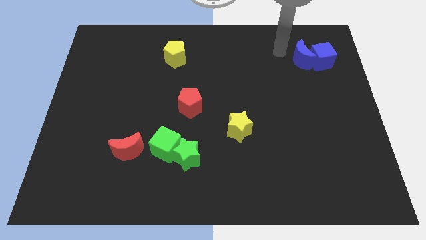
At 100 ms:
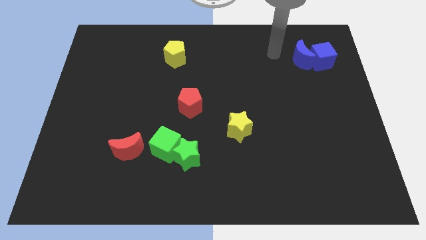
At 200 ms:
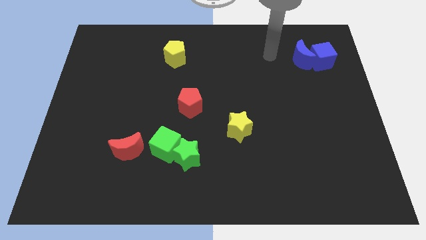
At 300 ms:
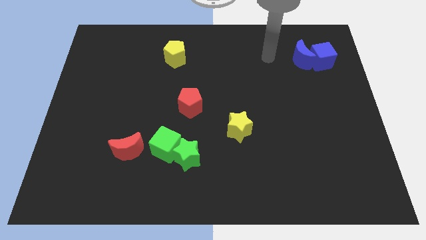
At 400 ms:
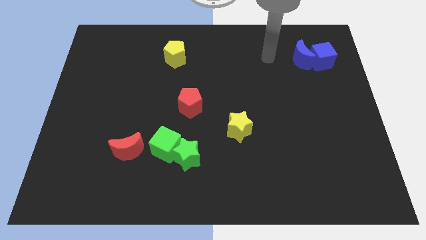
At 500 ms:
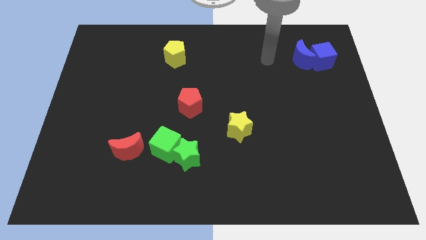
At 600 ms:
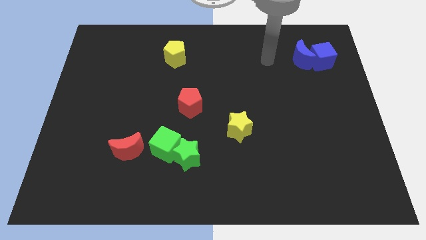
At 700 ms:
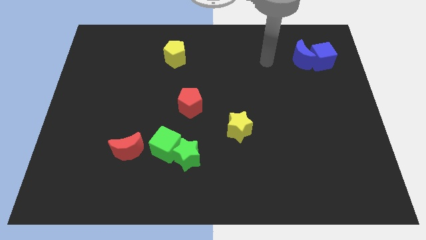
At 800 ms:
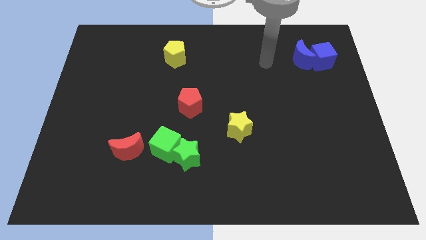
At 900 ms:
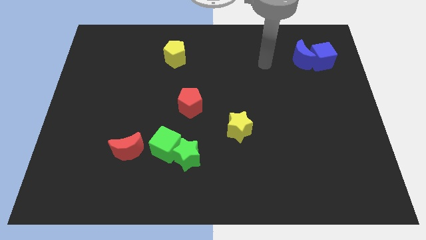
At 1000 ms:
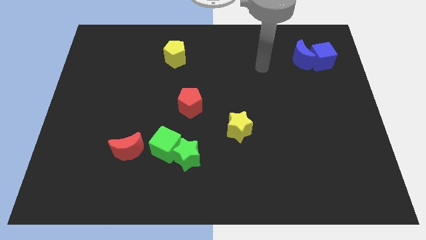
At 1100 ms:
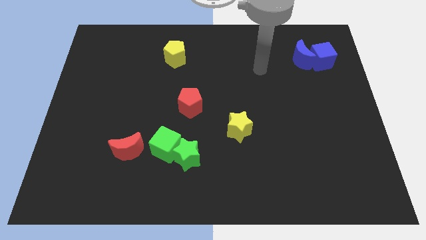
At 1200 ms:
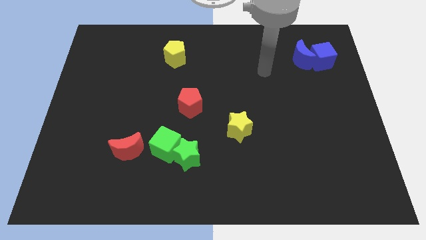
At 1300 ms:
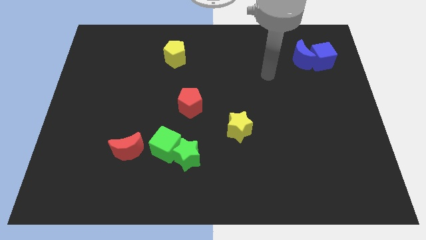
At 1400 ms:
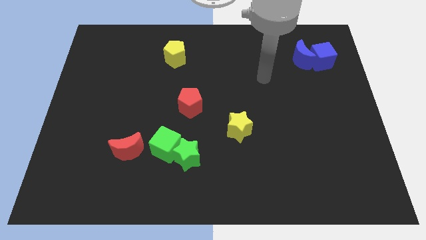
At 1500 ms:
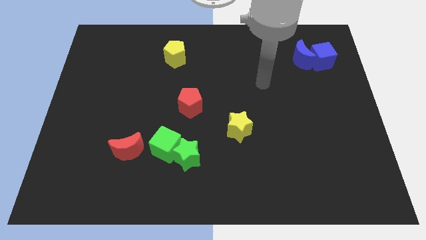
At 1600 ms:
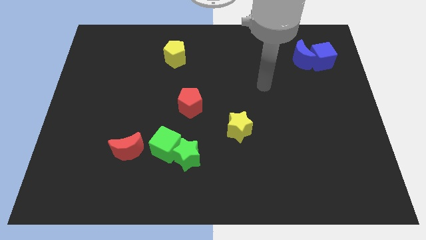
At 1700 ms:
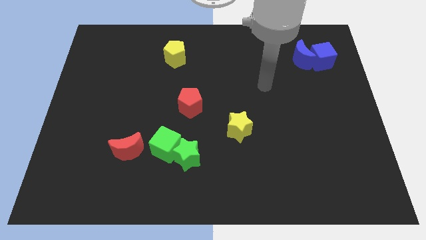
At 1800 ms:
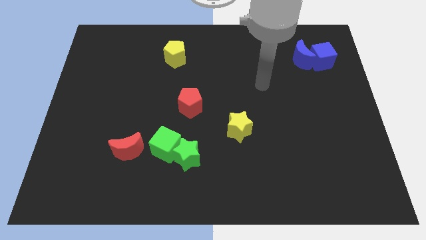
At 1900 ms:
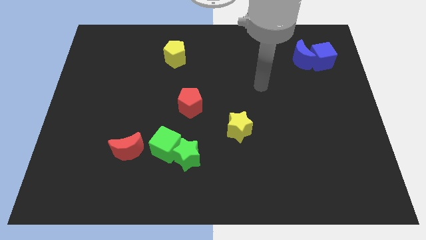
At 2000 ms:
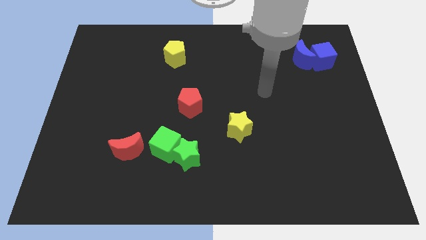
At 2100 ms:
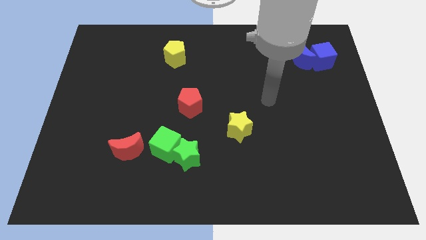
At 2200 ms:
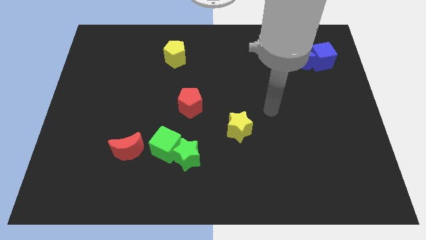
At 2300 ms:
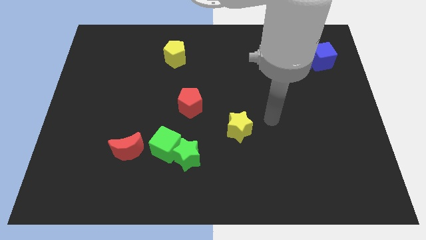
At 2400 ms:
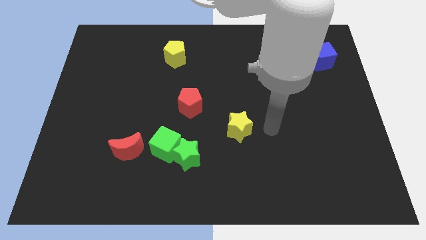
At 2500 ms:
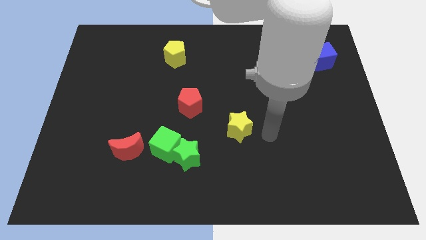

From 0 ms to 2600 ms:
point your arm at the right of the yellow star

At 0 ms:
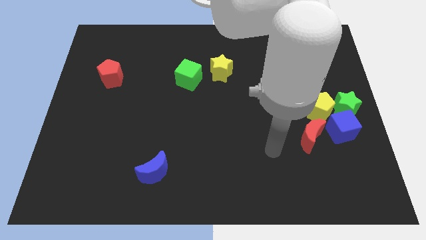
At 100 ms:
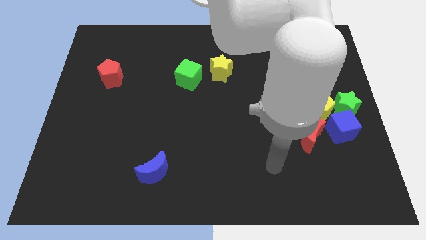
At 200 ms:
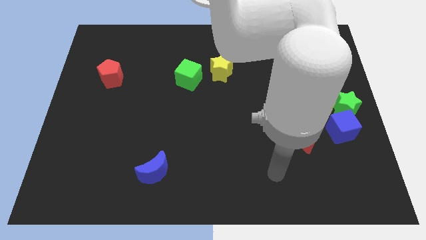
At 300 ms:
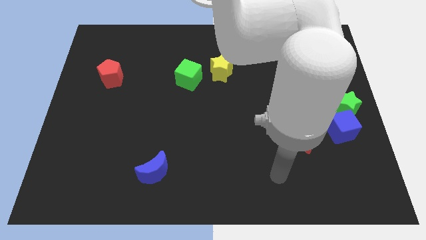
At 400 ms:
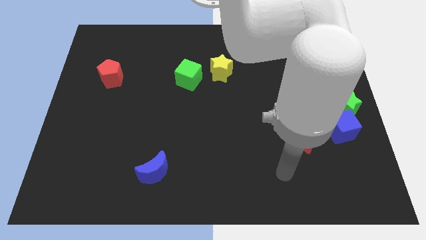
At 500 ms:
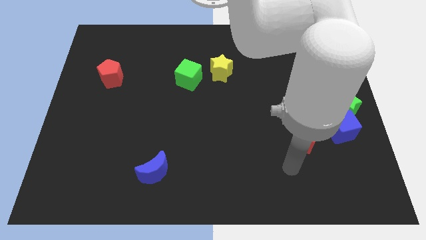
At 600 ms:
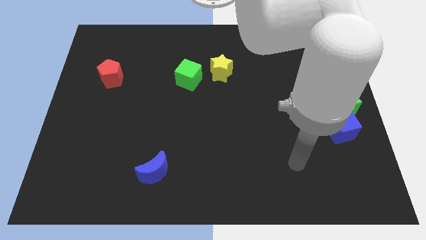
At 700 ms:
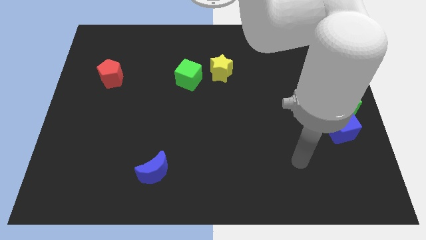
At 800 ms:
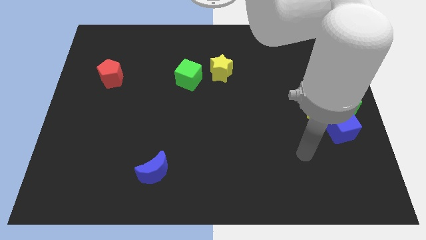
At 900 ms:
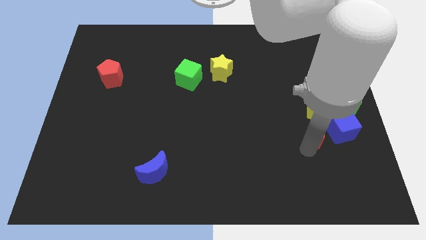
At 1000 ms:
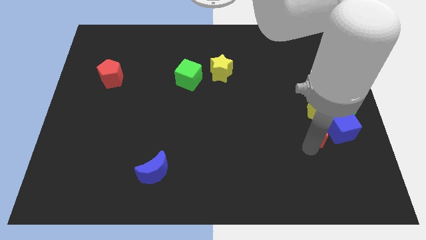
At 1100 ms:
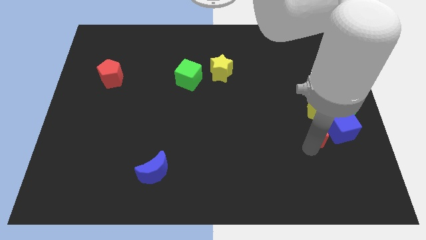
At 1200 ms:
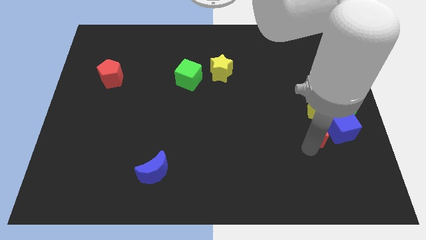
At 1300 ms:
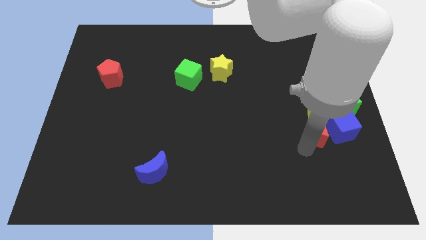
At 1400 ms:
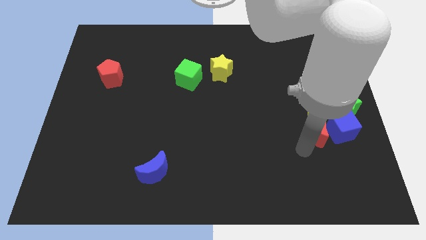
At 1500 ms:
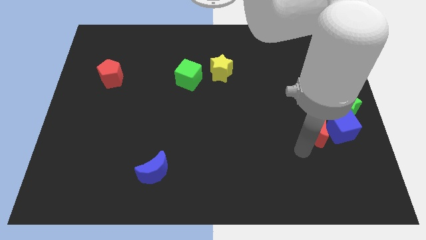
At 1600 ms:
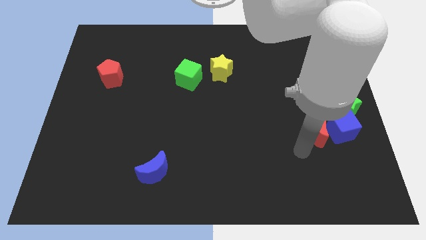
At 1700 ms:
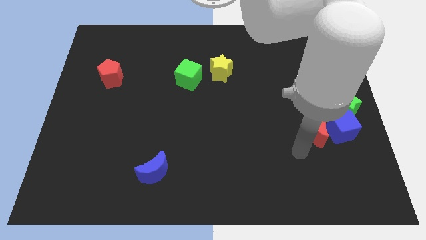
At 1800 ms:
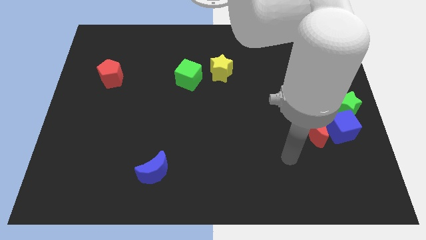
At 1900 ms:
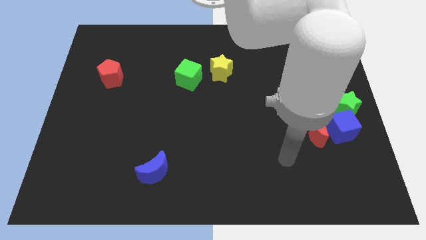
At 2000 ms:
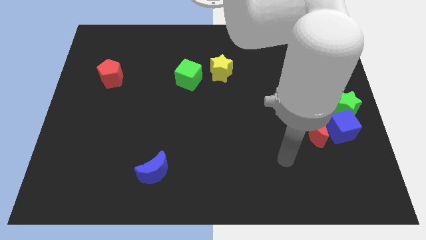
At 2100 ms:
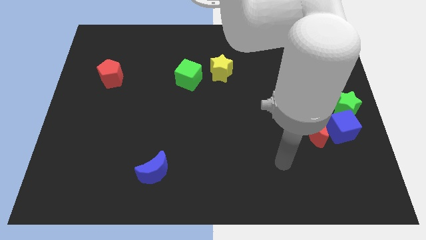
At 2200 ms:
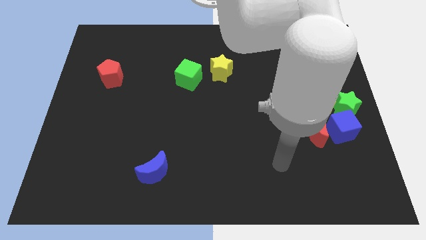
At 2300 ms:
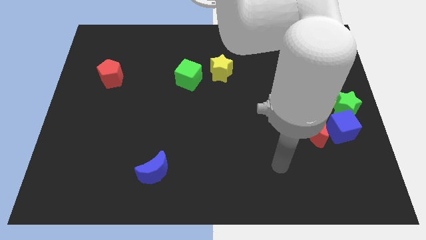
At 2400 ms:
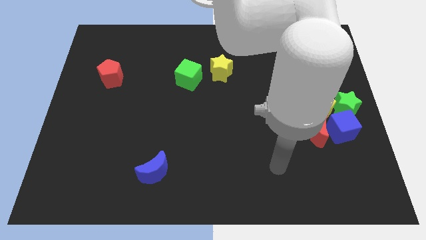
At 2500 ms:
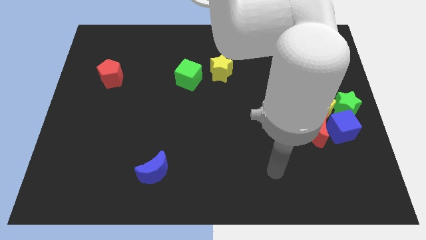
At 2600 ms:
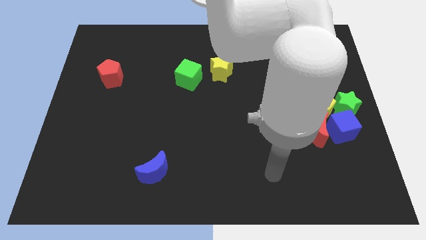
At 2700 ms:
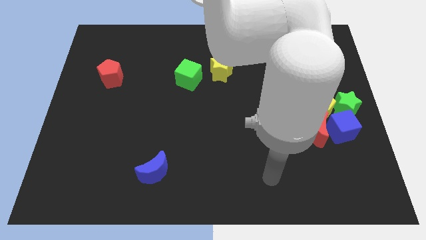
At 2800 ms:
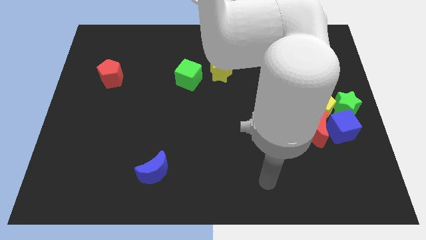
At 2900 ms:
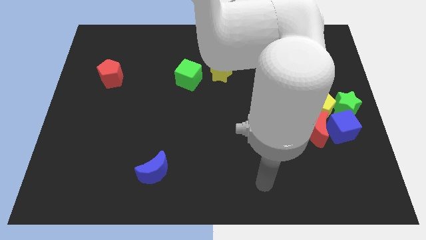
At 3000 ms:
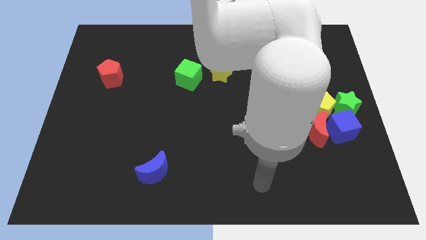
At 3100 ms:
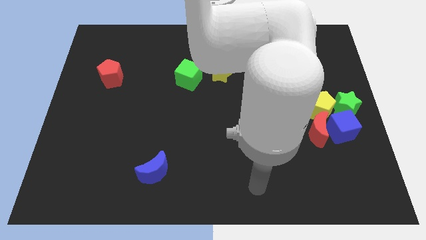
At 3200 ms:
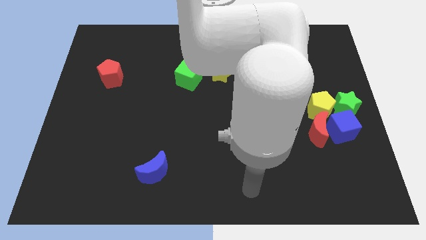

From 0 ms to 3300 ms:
push the red crescent into the bottom of the yellow pentagon

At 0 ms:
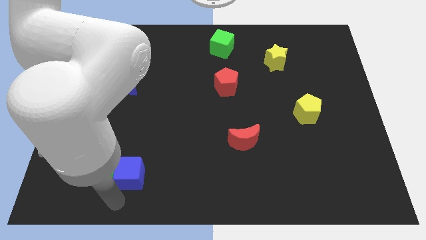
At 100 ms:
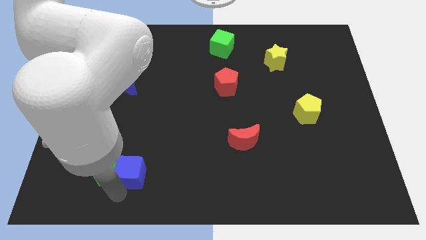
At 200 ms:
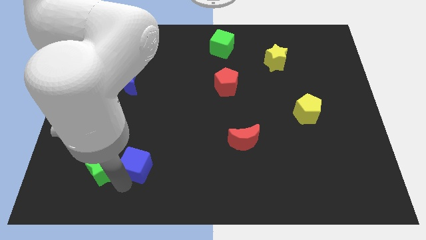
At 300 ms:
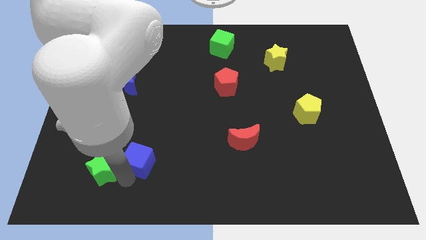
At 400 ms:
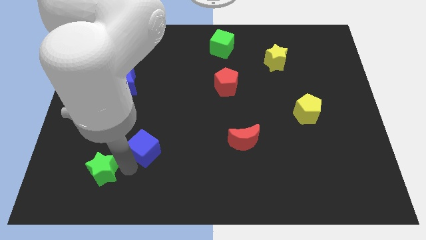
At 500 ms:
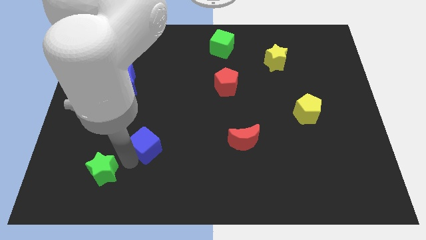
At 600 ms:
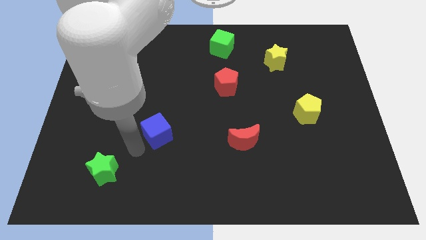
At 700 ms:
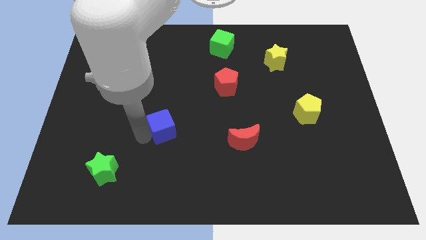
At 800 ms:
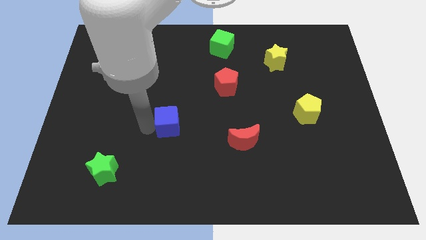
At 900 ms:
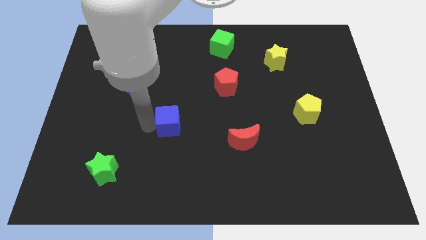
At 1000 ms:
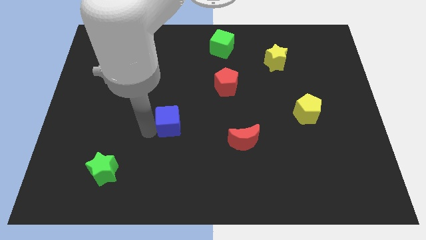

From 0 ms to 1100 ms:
separate the blue cube from the green star
